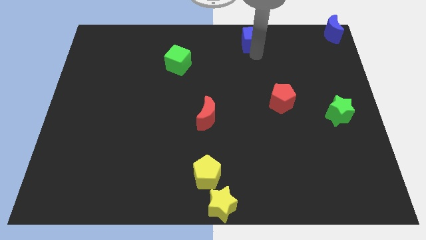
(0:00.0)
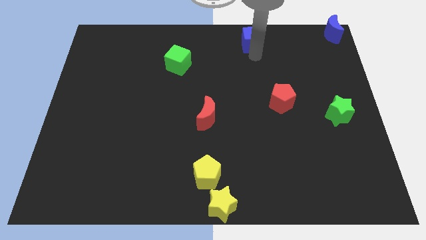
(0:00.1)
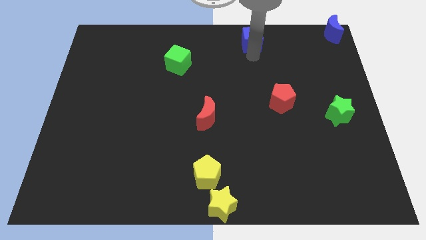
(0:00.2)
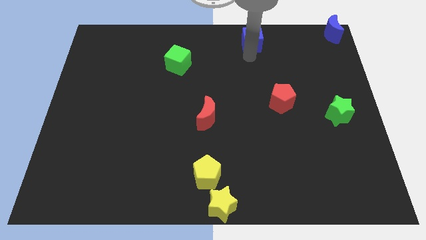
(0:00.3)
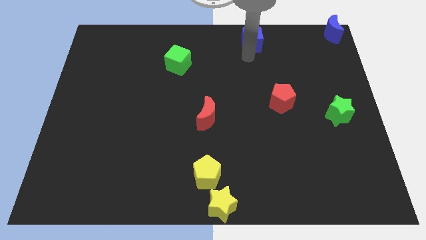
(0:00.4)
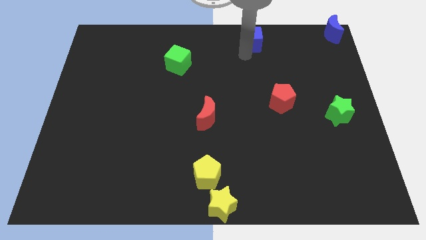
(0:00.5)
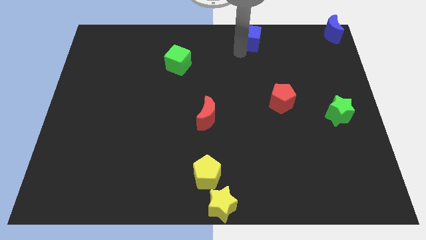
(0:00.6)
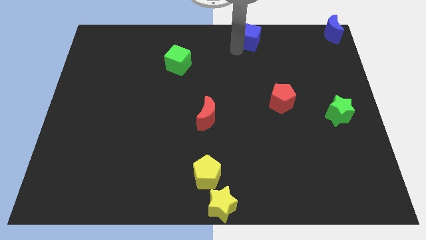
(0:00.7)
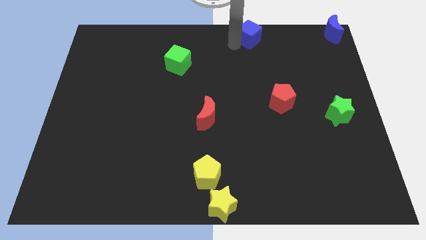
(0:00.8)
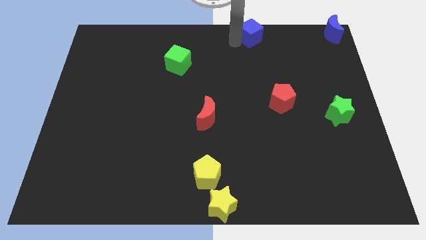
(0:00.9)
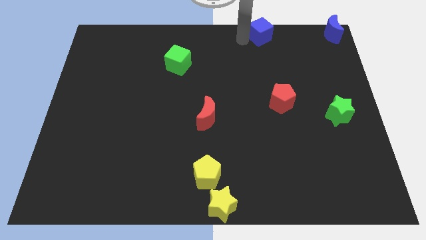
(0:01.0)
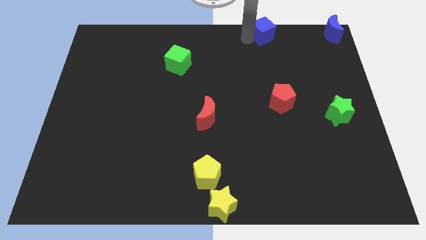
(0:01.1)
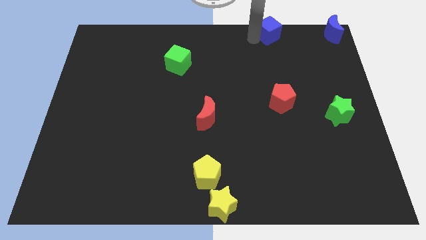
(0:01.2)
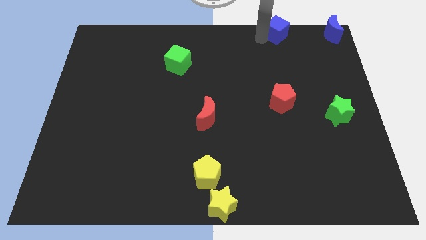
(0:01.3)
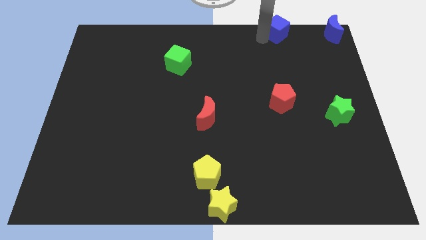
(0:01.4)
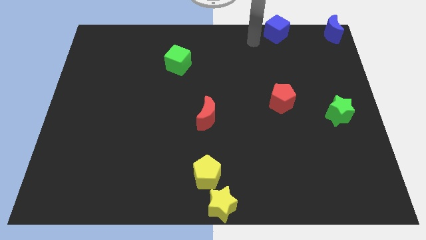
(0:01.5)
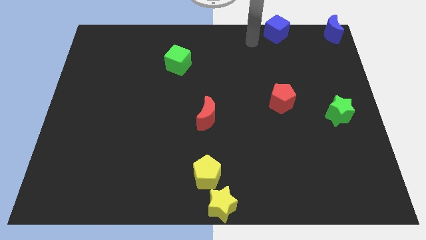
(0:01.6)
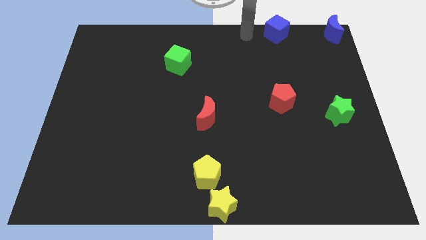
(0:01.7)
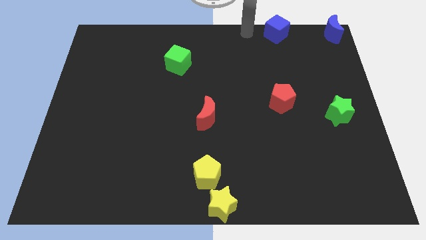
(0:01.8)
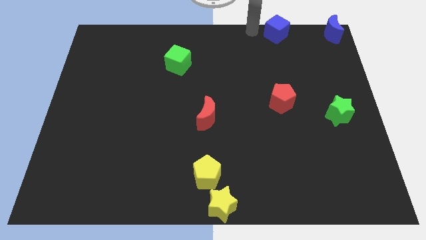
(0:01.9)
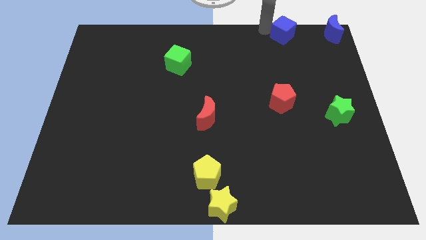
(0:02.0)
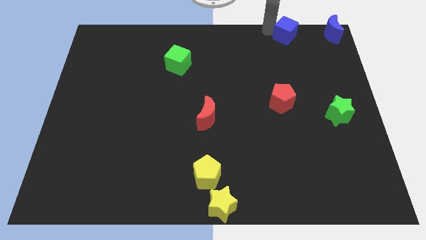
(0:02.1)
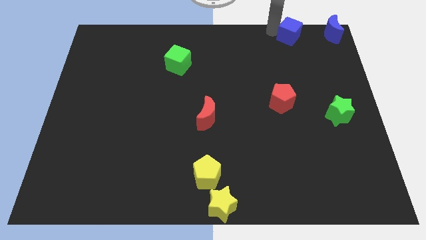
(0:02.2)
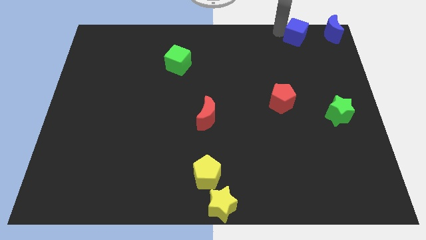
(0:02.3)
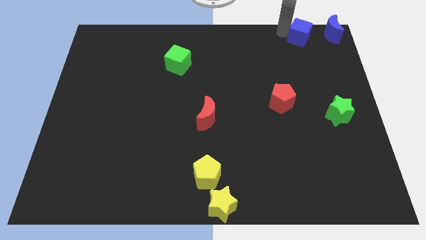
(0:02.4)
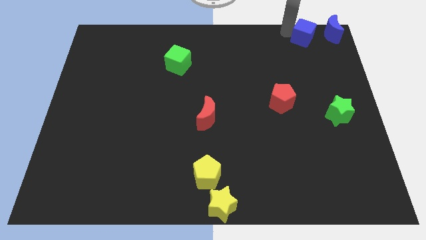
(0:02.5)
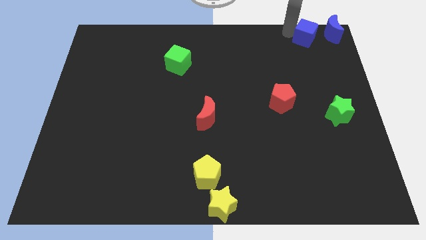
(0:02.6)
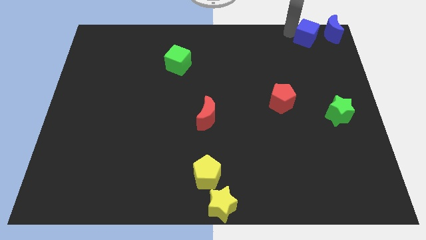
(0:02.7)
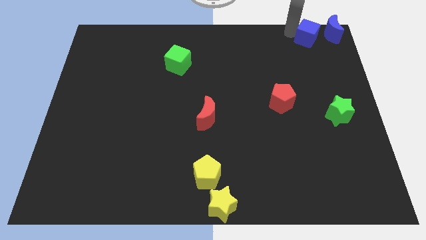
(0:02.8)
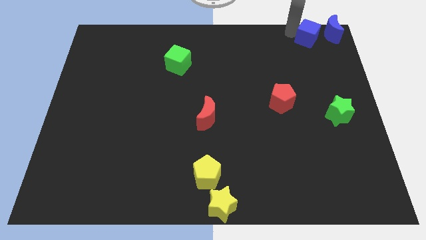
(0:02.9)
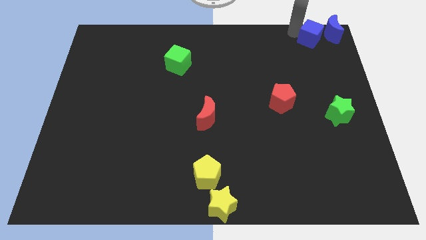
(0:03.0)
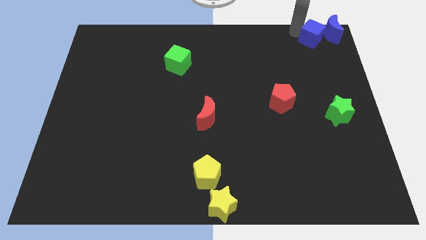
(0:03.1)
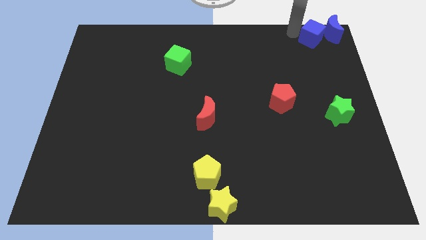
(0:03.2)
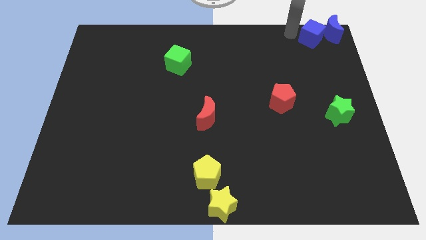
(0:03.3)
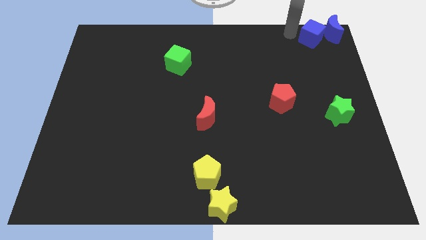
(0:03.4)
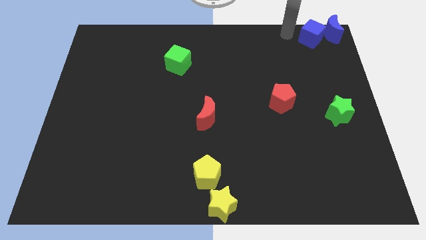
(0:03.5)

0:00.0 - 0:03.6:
push the blue cube to the left side of the blue moon

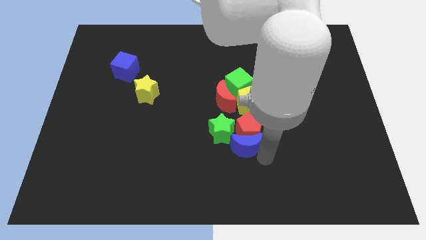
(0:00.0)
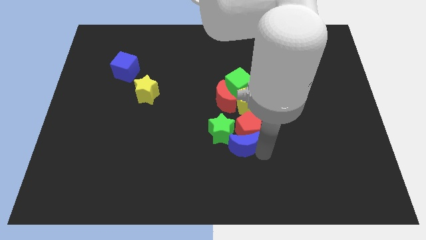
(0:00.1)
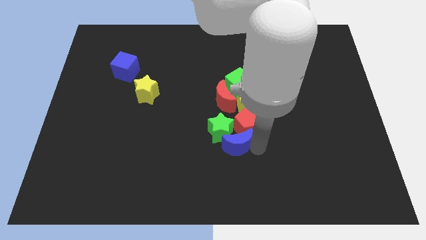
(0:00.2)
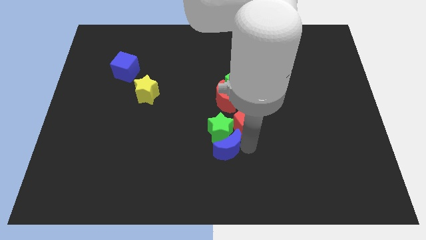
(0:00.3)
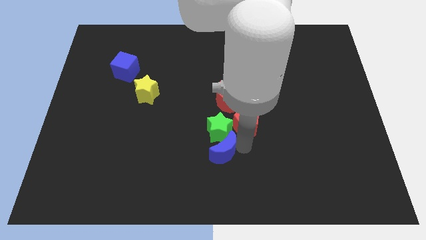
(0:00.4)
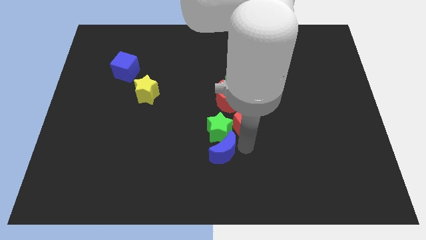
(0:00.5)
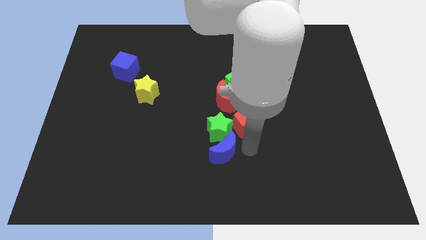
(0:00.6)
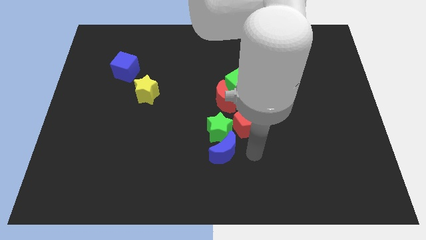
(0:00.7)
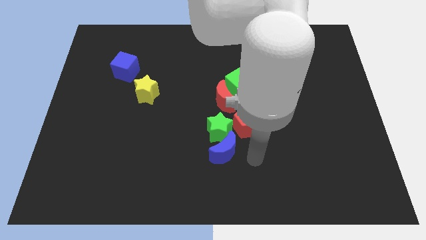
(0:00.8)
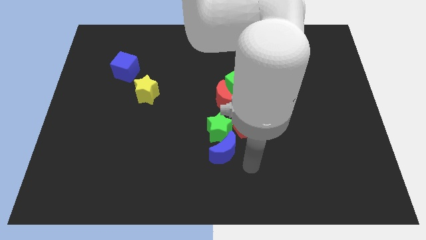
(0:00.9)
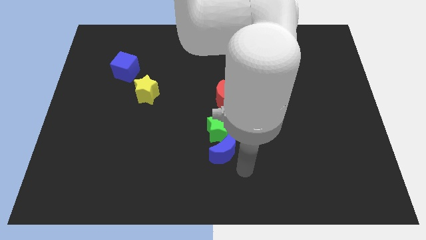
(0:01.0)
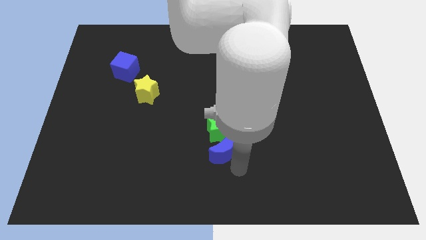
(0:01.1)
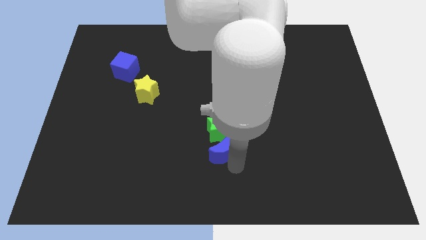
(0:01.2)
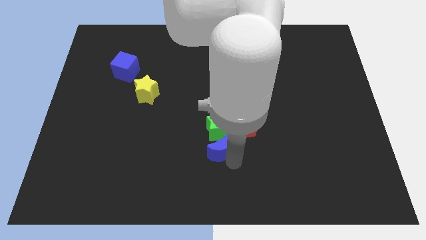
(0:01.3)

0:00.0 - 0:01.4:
place blue moon to the bottom right of the green star

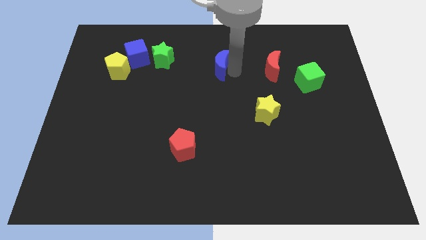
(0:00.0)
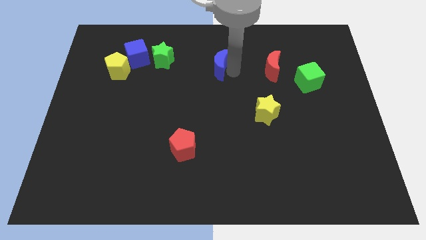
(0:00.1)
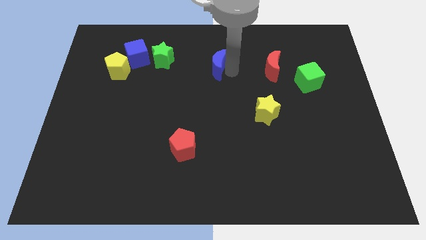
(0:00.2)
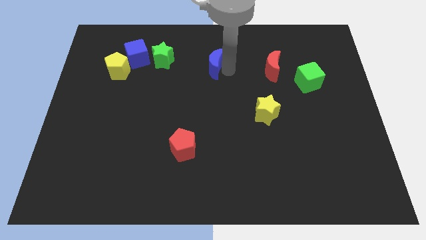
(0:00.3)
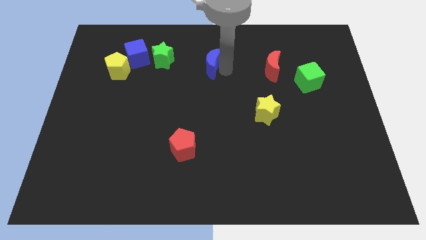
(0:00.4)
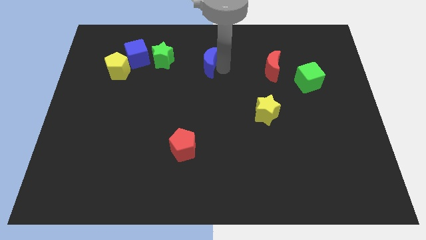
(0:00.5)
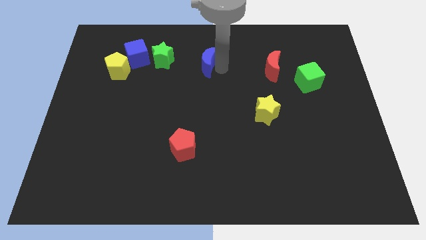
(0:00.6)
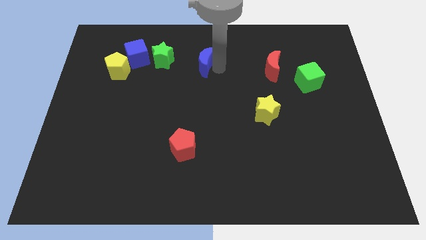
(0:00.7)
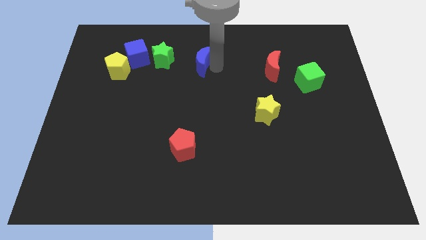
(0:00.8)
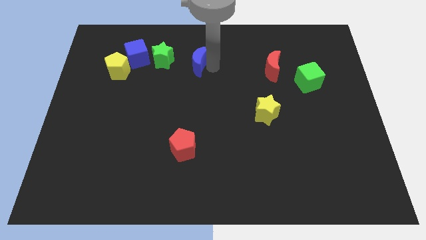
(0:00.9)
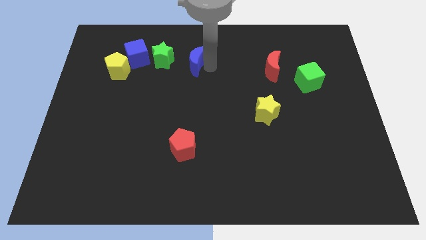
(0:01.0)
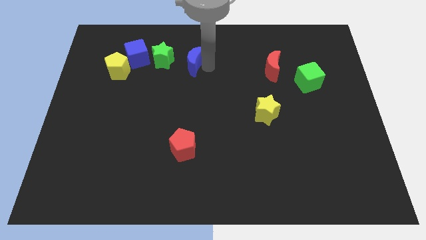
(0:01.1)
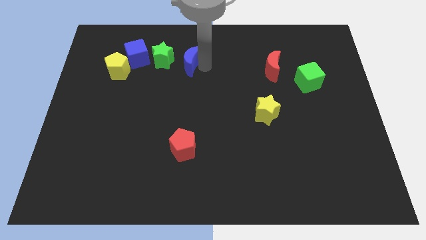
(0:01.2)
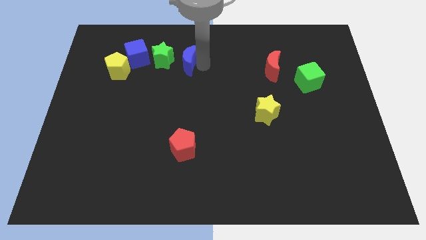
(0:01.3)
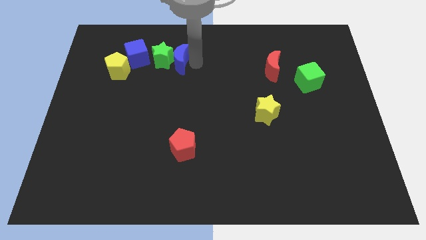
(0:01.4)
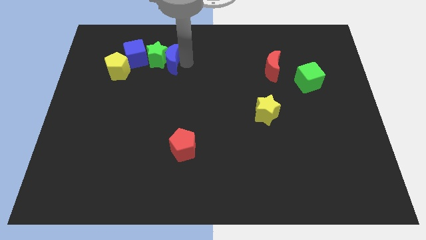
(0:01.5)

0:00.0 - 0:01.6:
move the blue crescent into the green star

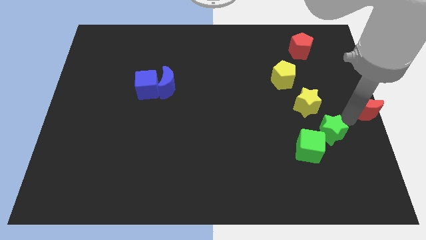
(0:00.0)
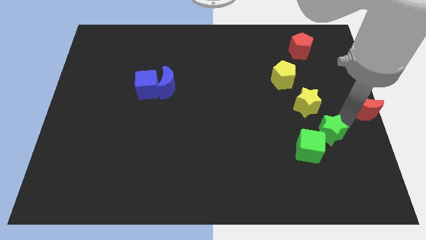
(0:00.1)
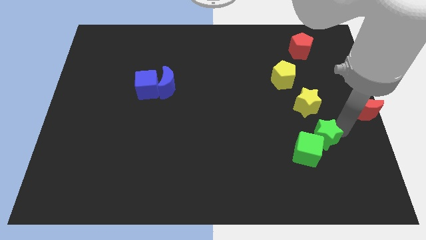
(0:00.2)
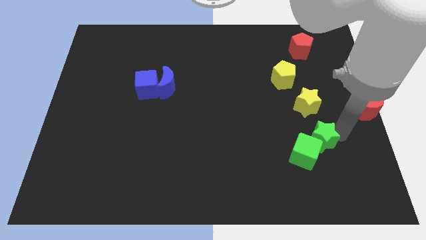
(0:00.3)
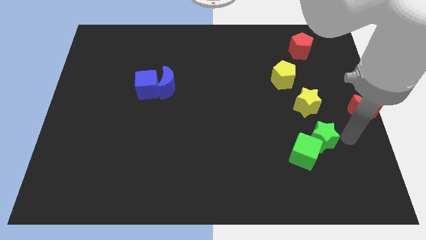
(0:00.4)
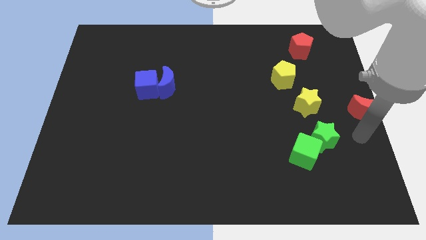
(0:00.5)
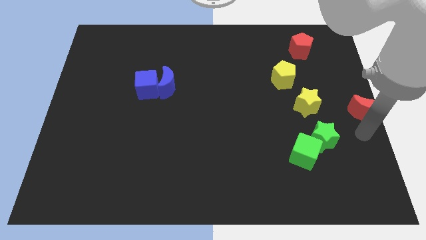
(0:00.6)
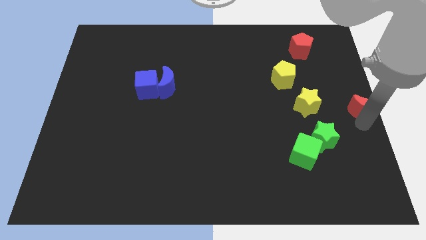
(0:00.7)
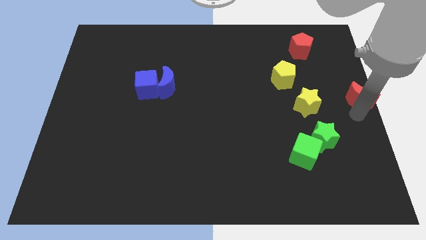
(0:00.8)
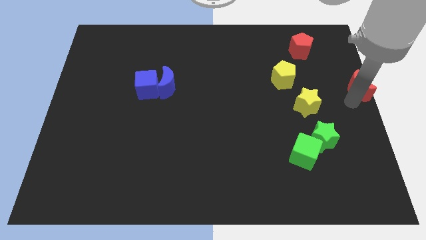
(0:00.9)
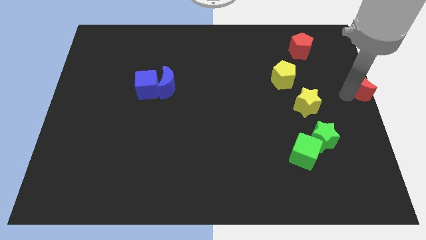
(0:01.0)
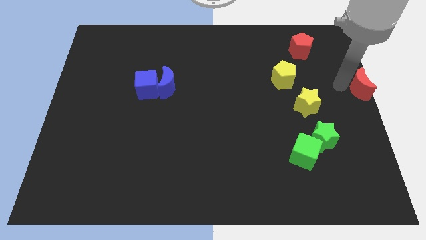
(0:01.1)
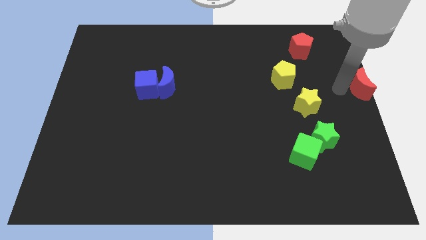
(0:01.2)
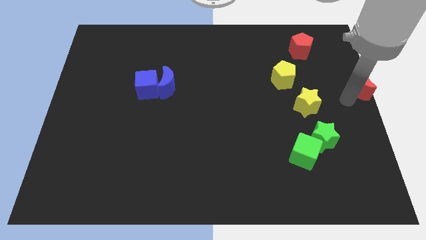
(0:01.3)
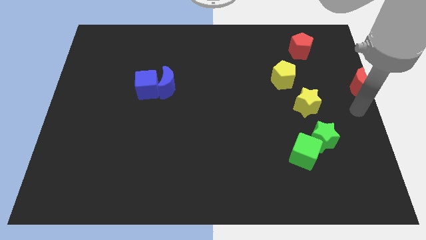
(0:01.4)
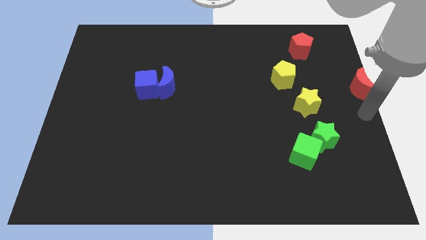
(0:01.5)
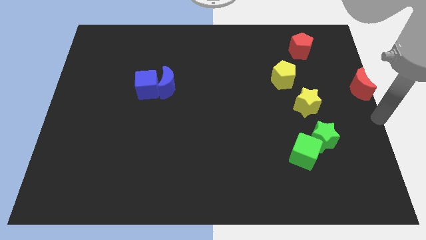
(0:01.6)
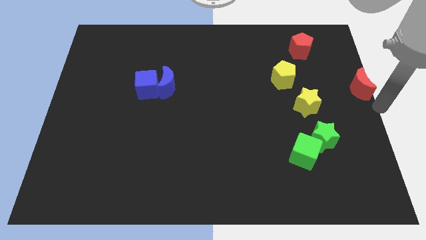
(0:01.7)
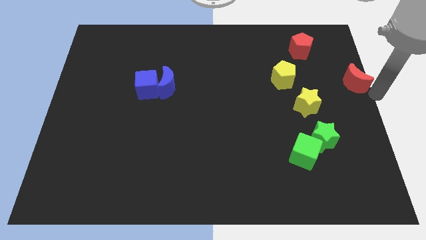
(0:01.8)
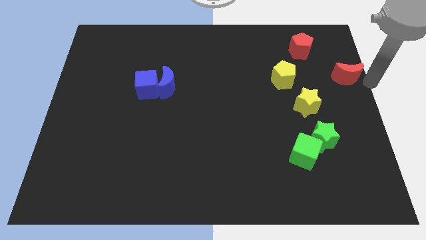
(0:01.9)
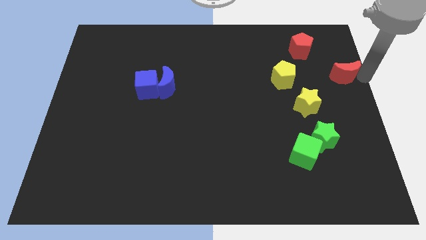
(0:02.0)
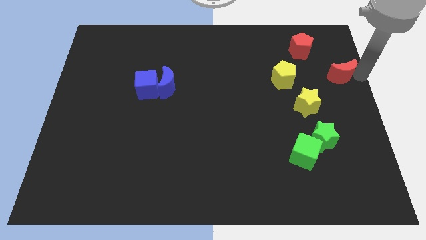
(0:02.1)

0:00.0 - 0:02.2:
move the red crescent to the upwards of the board

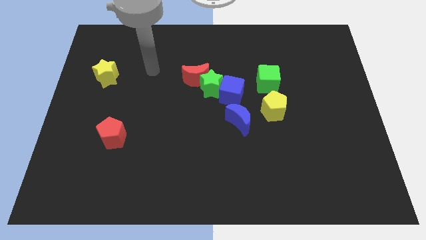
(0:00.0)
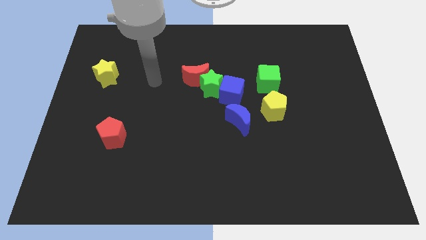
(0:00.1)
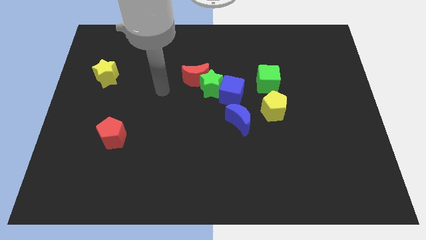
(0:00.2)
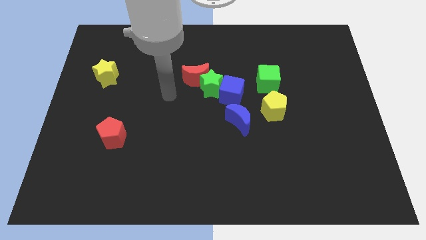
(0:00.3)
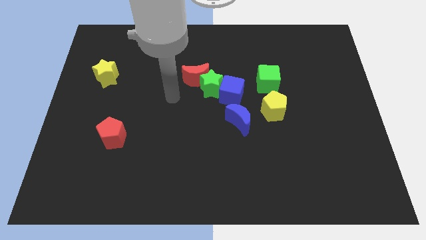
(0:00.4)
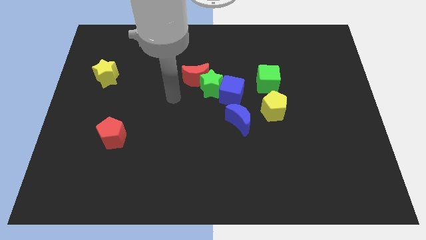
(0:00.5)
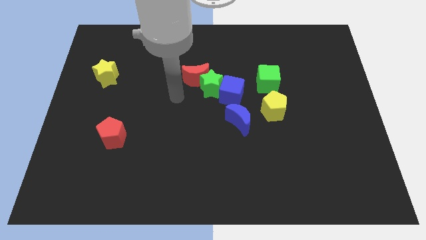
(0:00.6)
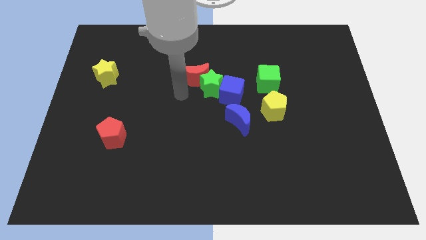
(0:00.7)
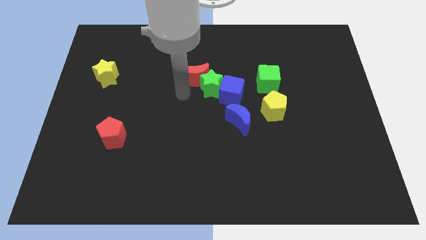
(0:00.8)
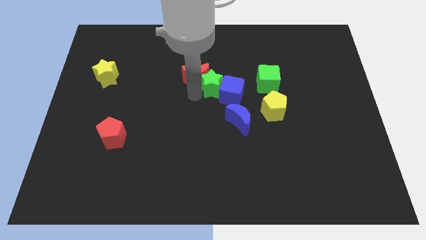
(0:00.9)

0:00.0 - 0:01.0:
place arm close to green star
